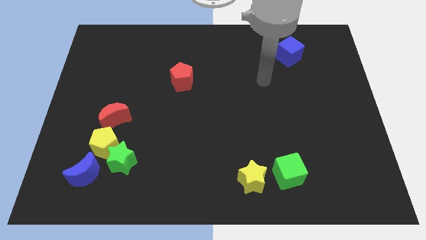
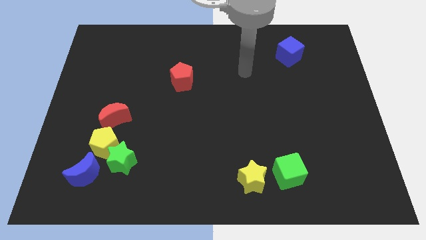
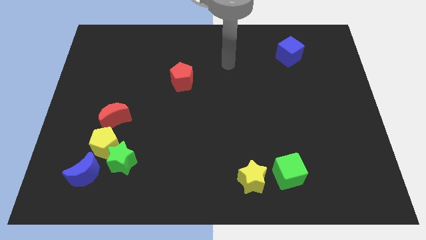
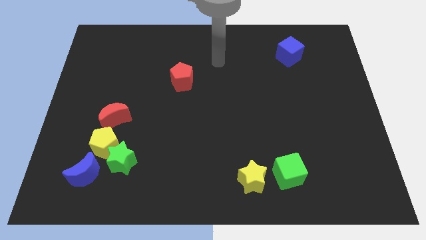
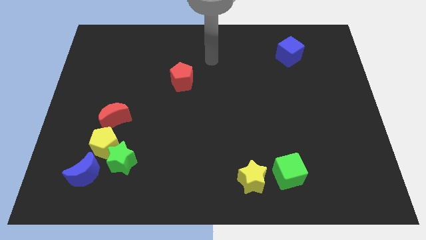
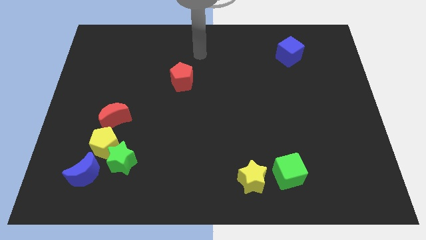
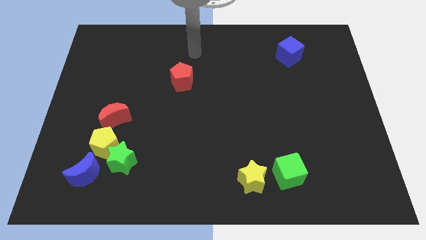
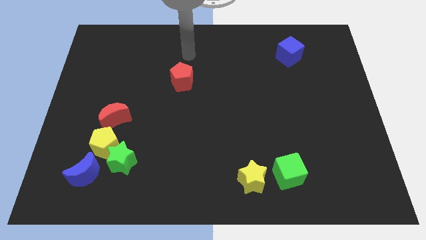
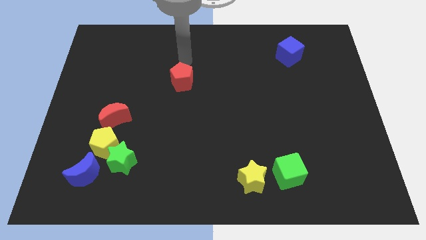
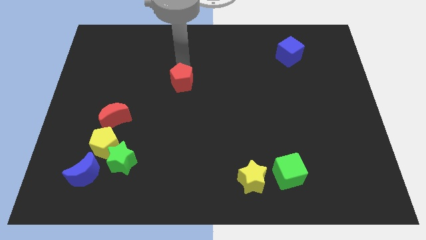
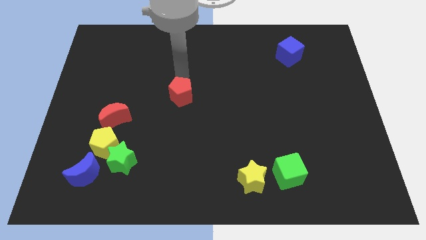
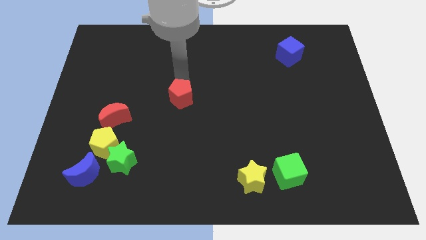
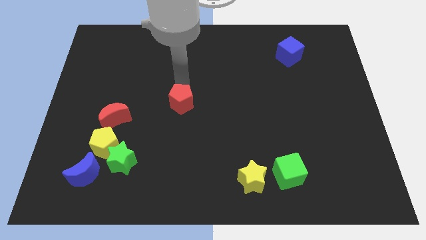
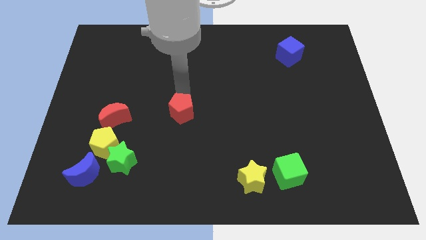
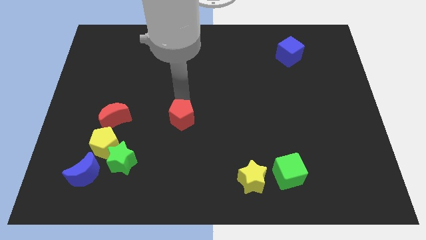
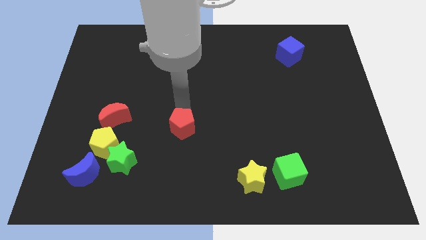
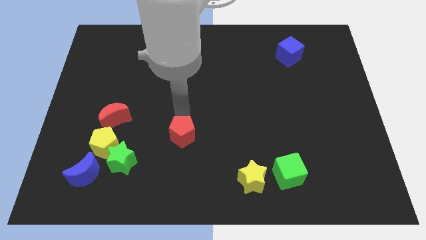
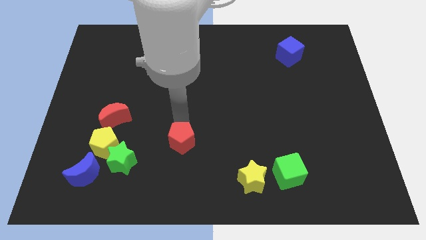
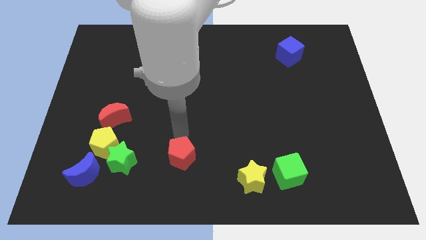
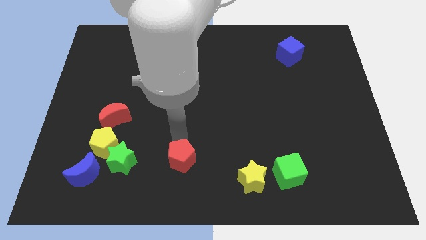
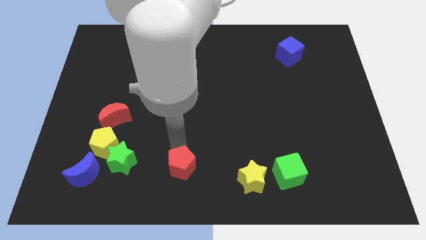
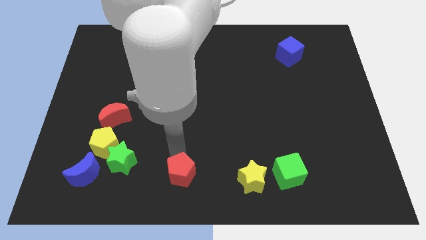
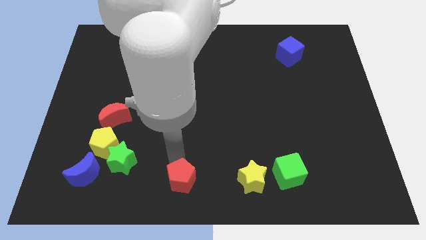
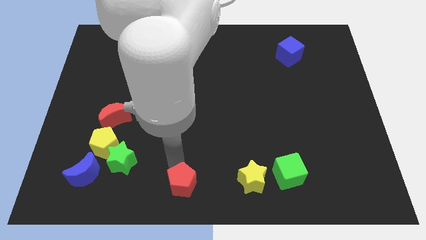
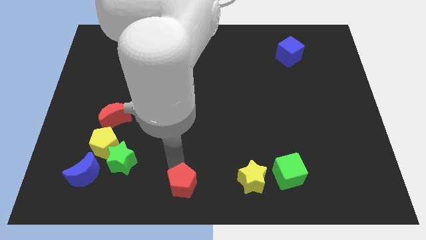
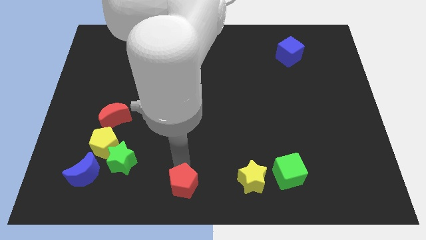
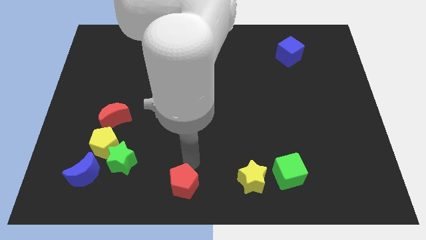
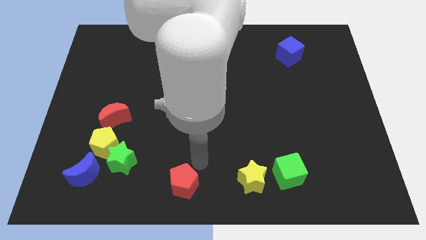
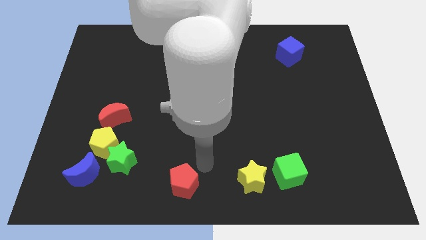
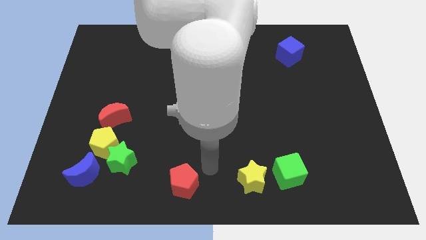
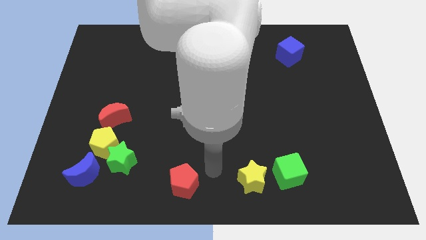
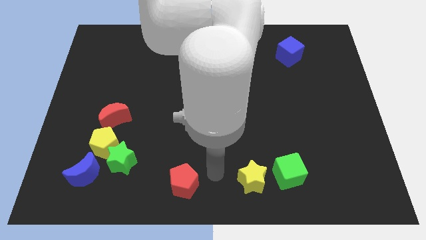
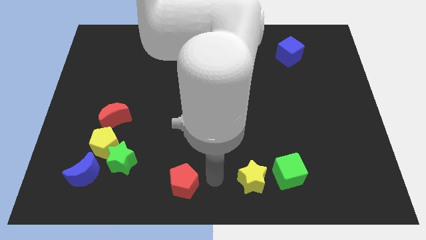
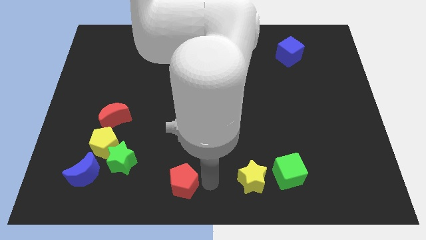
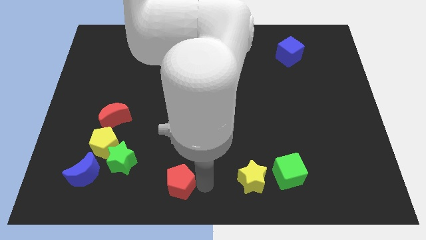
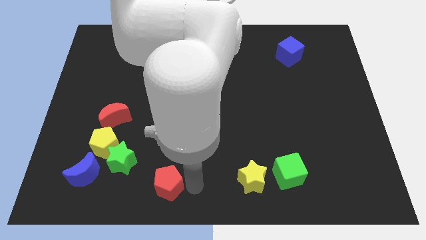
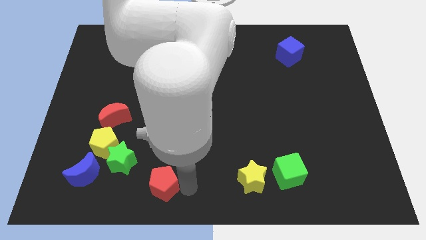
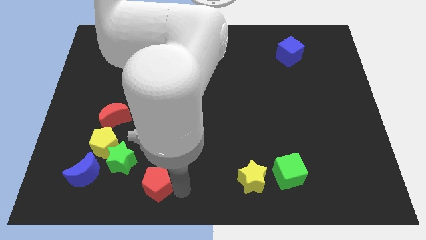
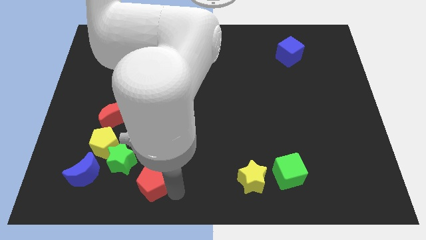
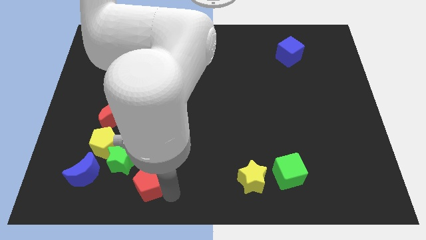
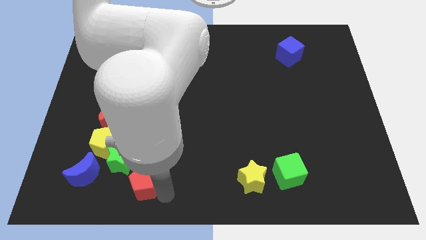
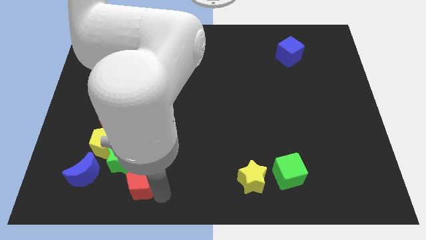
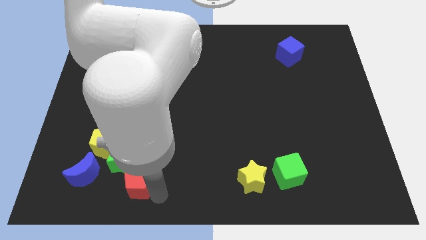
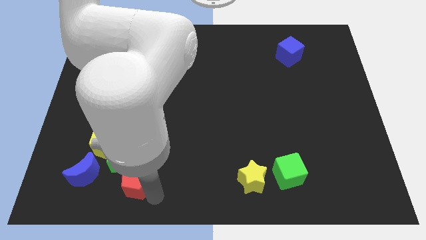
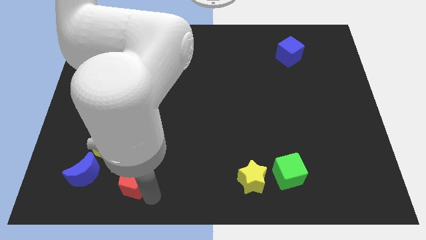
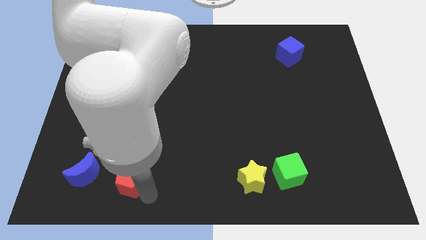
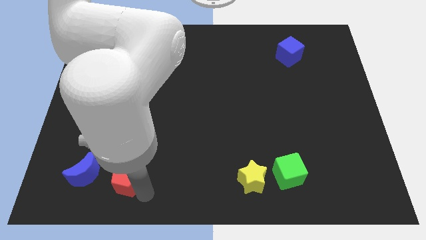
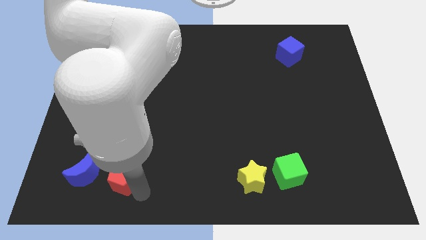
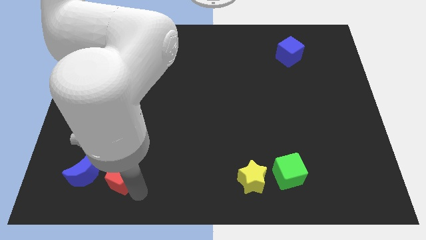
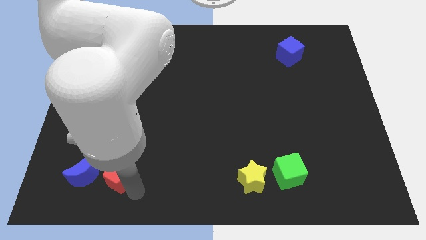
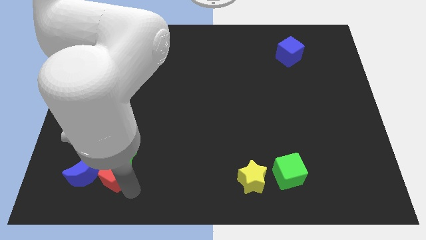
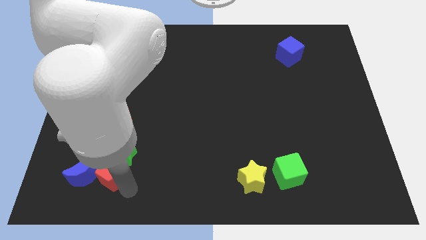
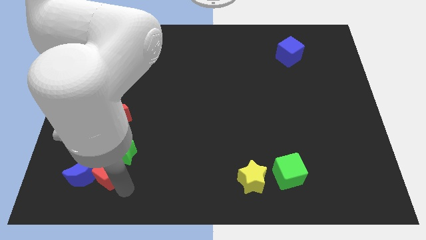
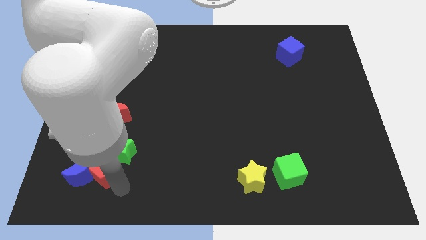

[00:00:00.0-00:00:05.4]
push the red pentagon towards the blue moon

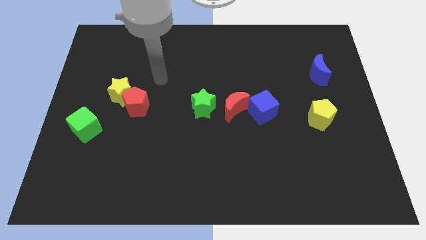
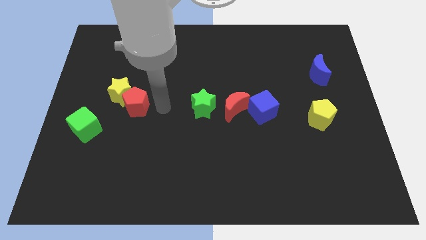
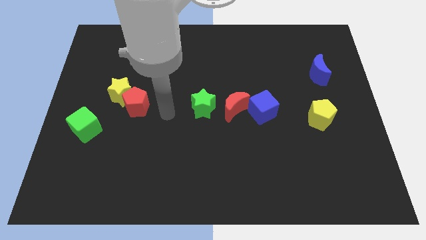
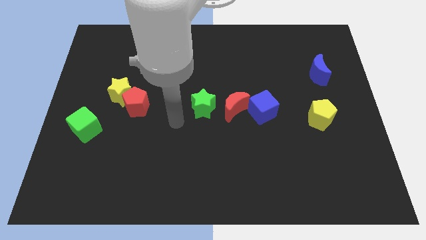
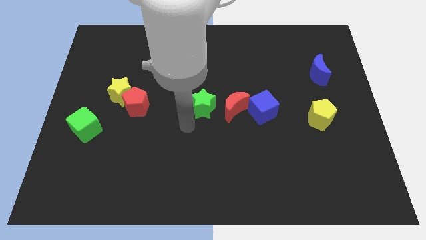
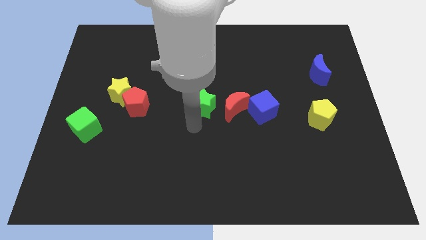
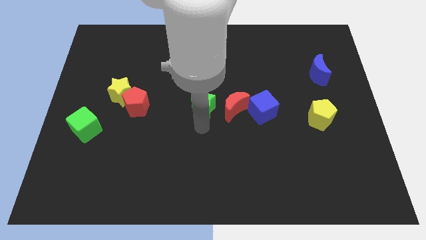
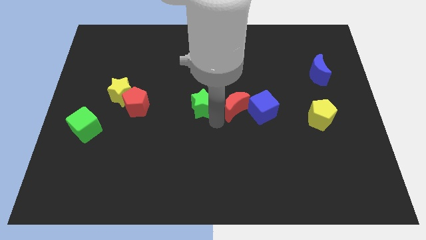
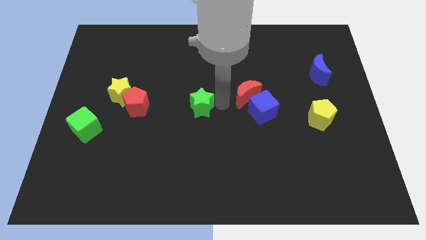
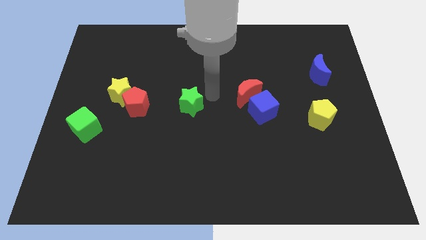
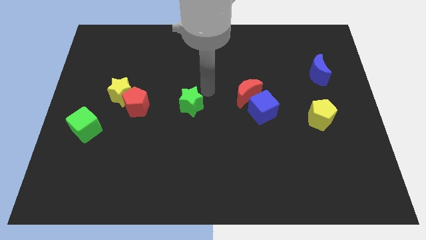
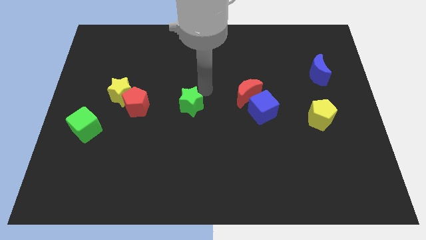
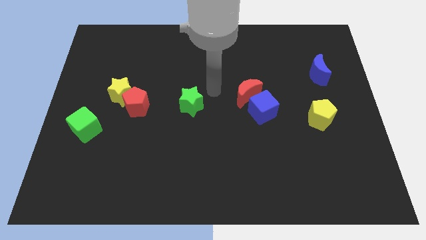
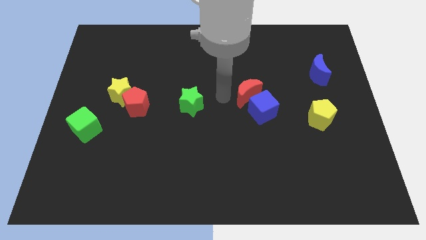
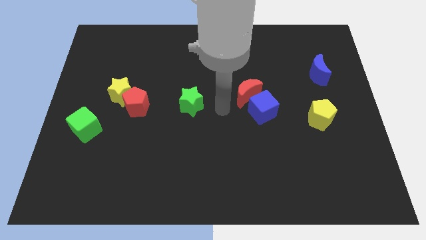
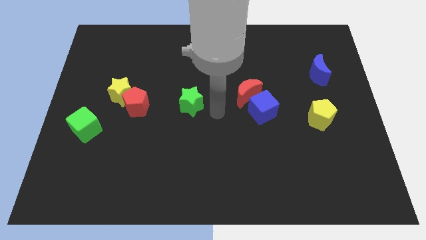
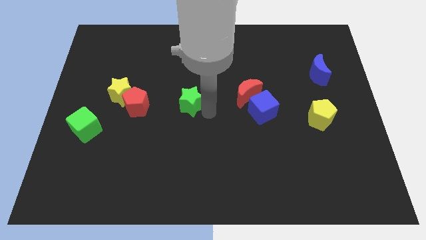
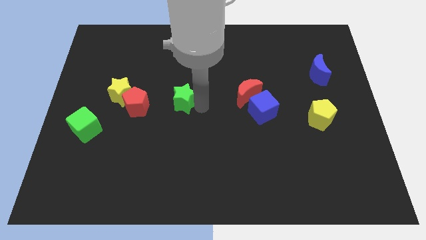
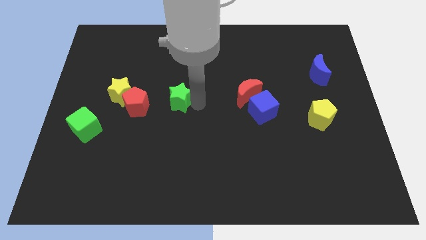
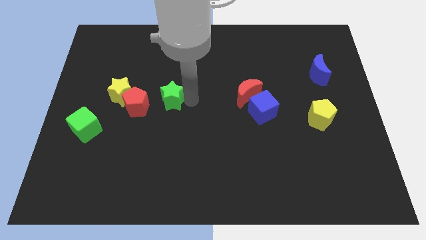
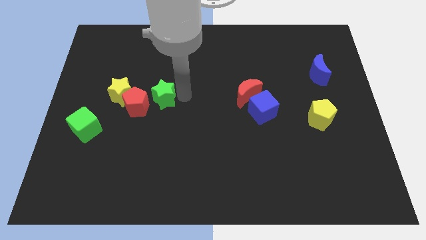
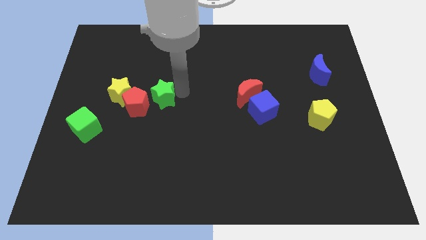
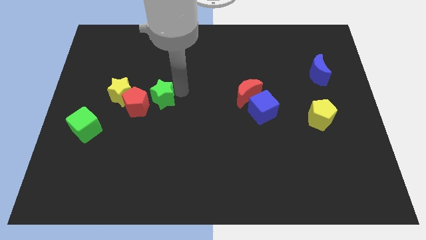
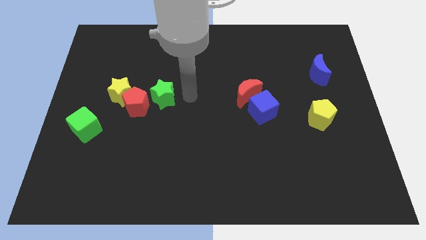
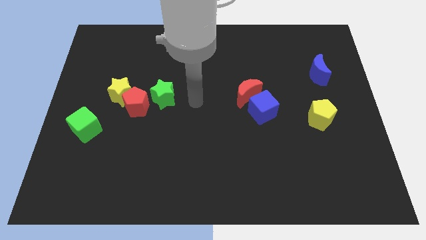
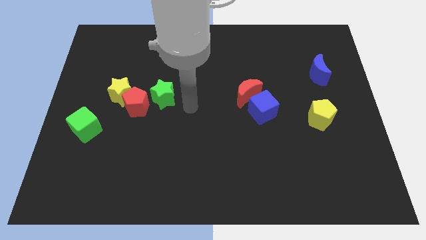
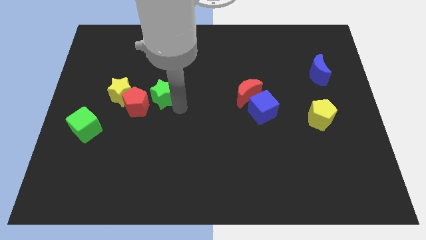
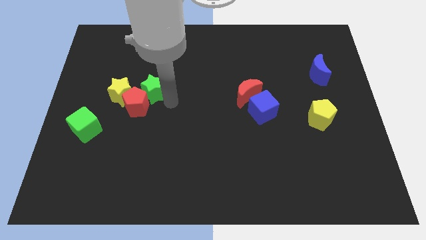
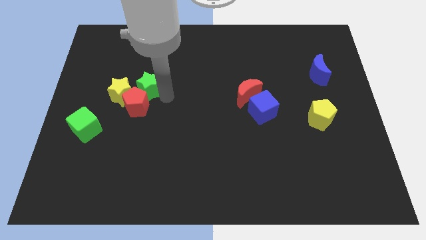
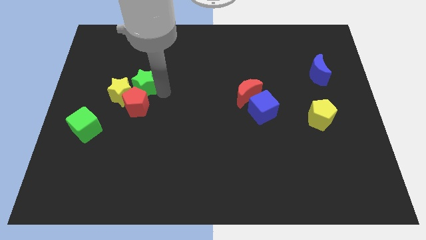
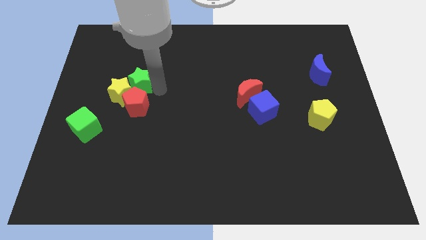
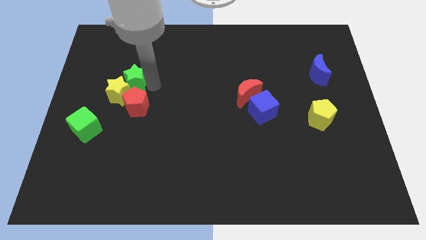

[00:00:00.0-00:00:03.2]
push the green star to the yellow star
